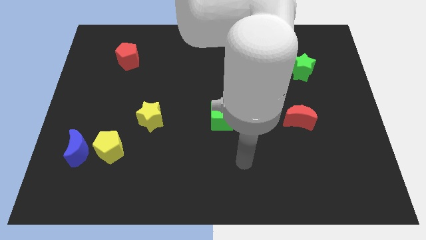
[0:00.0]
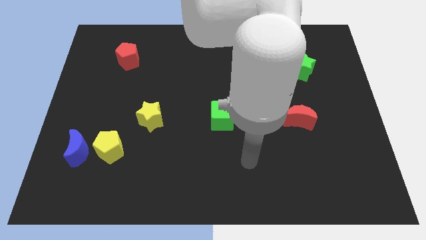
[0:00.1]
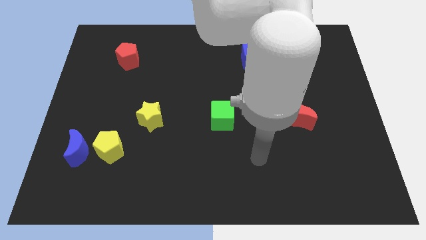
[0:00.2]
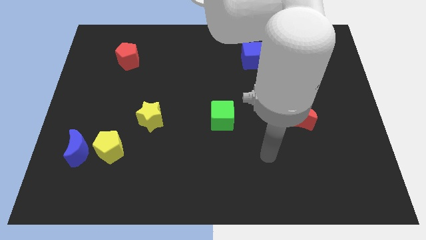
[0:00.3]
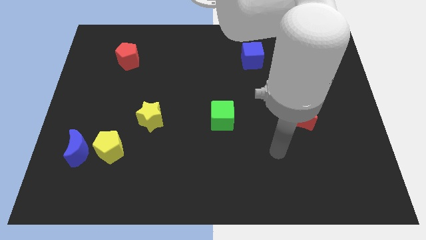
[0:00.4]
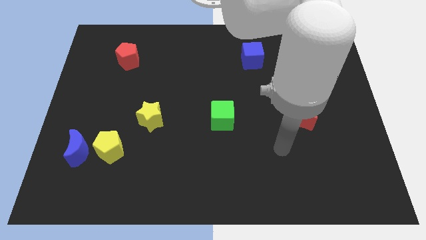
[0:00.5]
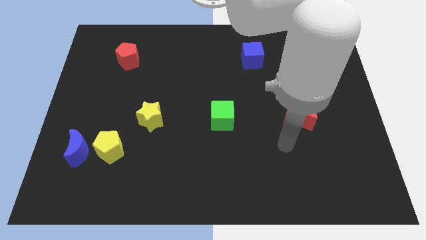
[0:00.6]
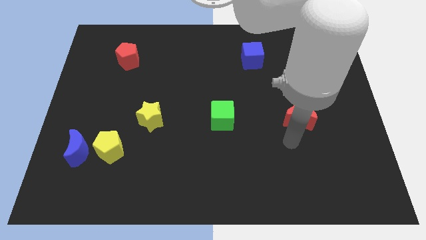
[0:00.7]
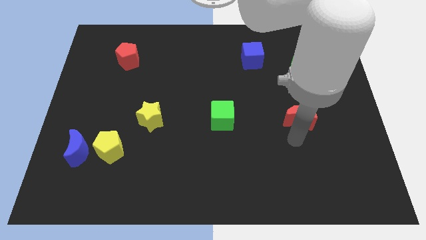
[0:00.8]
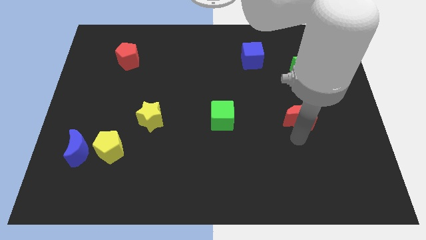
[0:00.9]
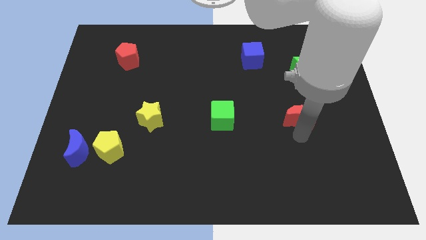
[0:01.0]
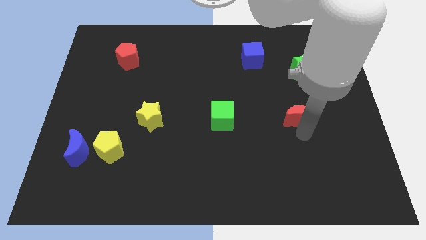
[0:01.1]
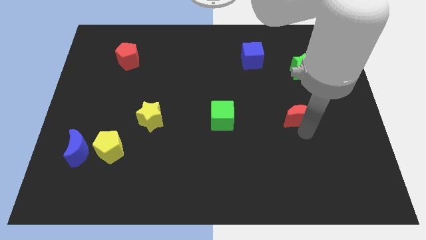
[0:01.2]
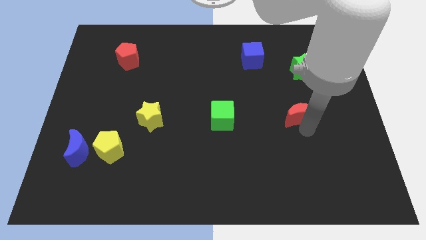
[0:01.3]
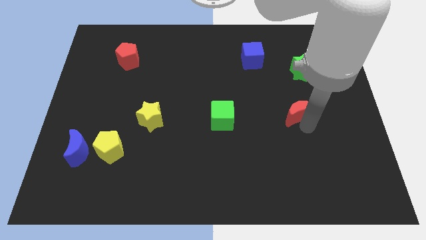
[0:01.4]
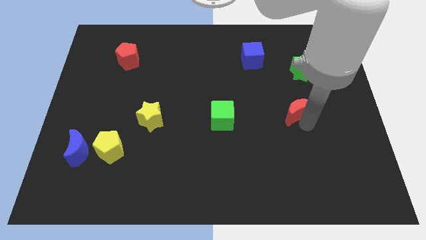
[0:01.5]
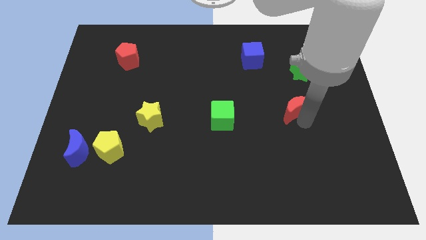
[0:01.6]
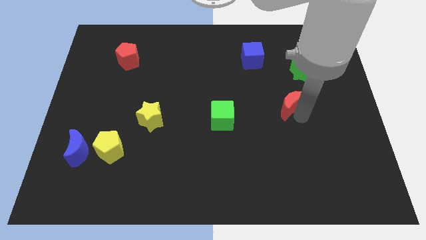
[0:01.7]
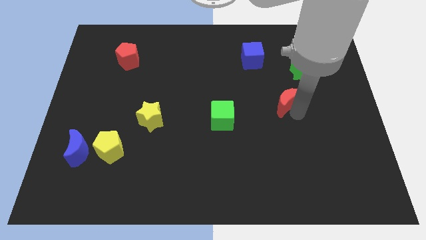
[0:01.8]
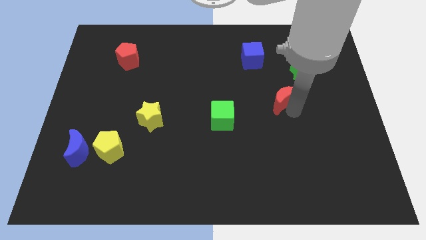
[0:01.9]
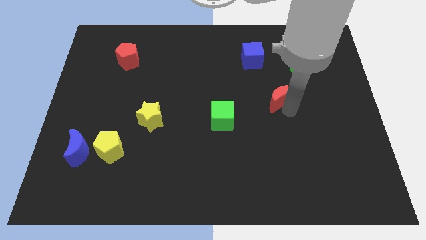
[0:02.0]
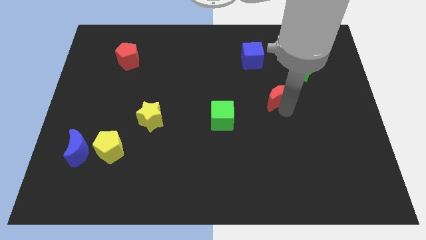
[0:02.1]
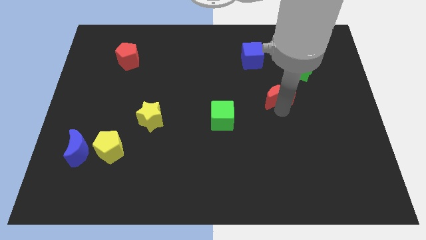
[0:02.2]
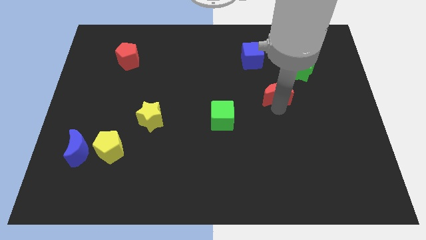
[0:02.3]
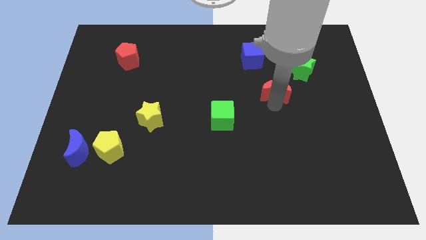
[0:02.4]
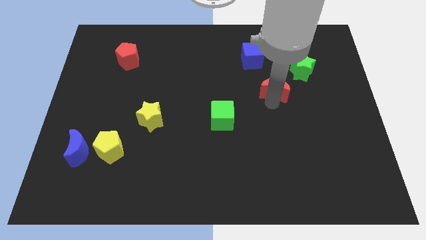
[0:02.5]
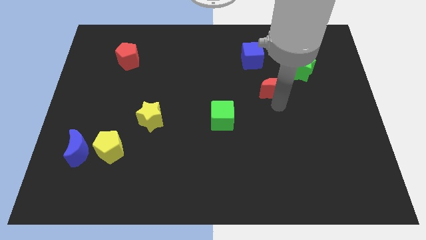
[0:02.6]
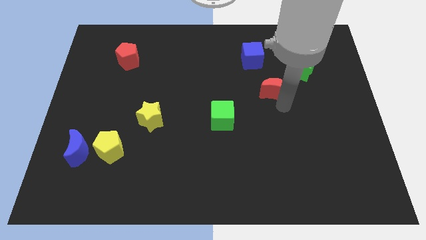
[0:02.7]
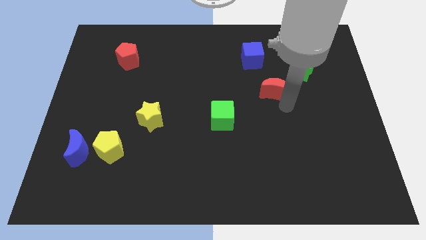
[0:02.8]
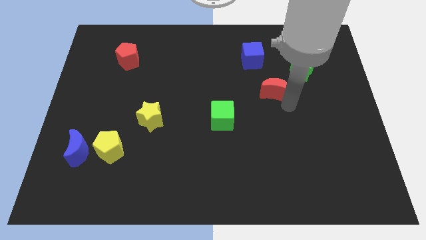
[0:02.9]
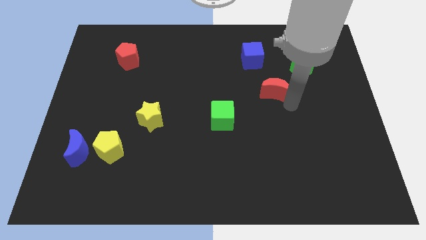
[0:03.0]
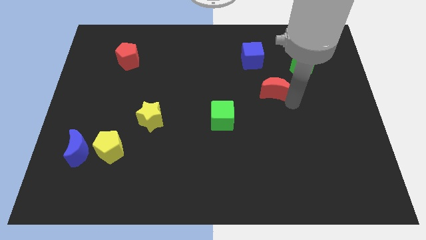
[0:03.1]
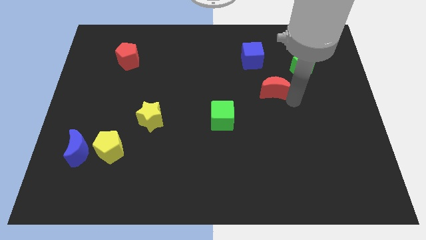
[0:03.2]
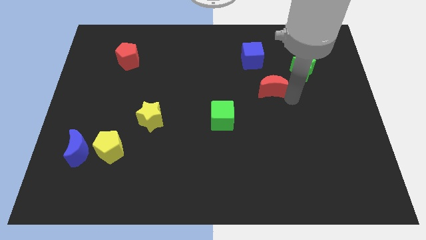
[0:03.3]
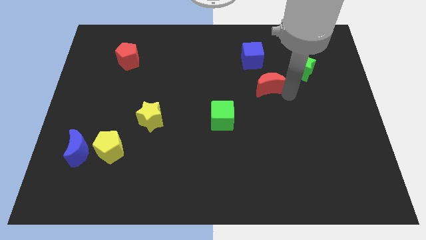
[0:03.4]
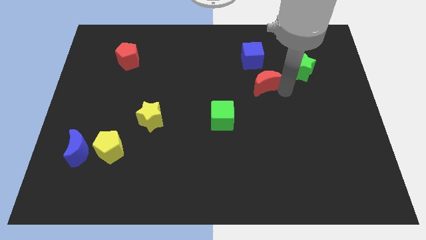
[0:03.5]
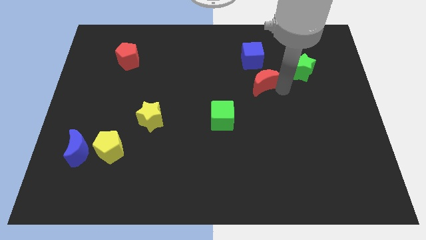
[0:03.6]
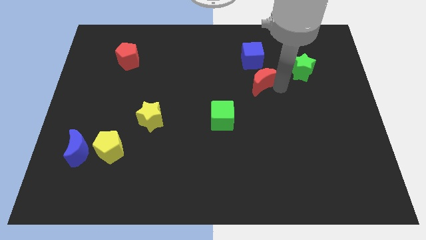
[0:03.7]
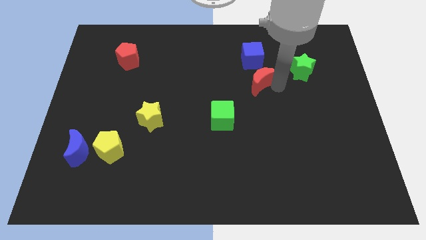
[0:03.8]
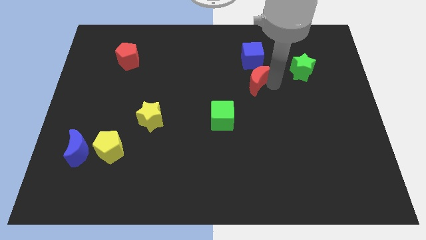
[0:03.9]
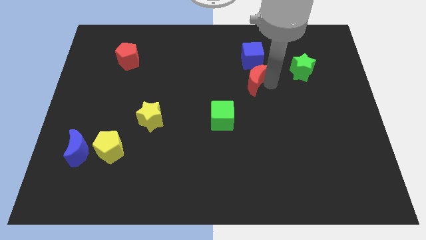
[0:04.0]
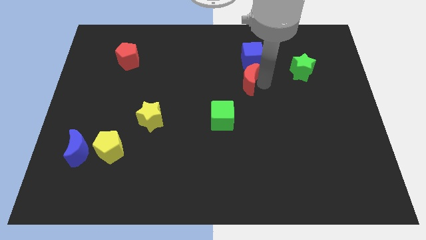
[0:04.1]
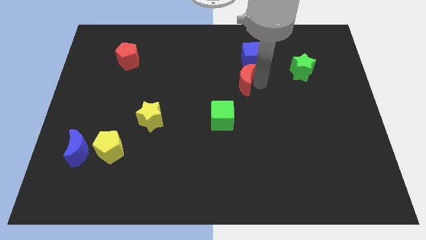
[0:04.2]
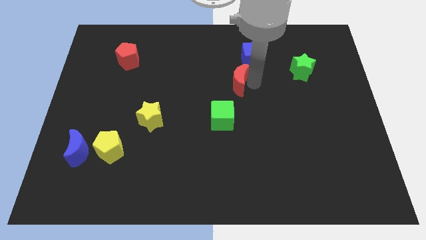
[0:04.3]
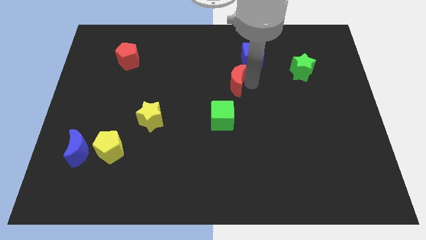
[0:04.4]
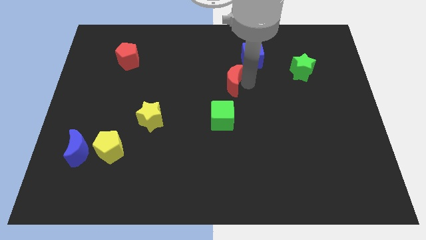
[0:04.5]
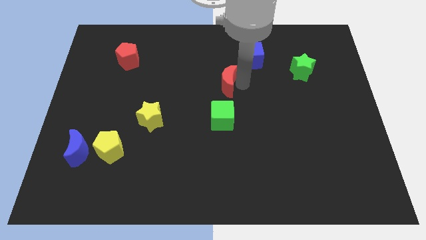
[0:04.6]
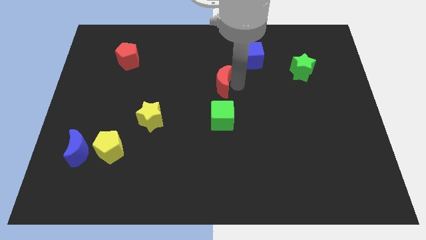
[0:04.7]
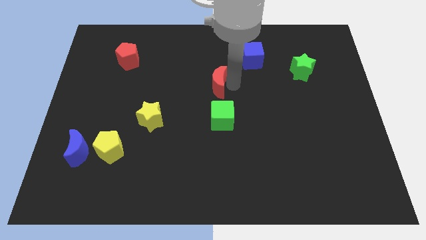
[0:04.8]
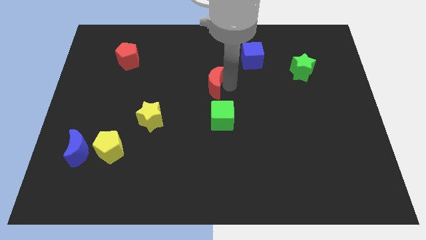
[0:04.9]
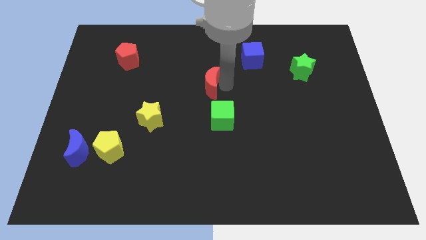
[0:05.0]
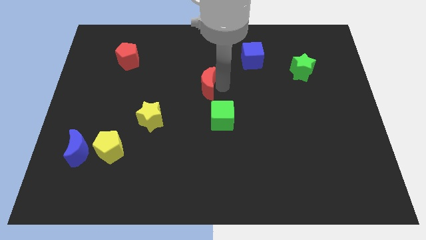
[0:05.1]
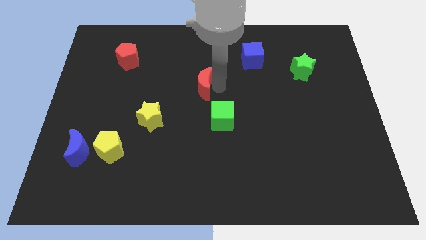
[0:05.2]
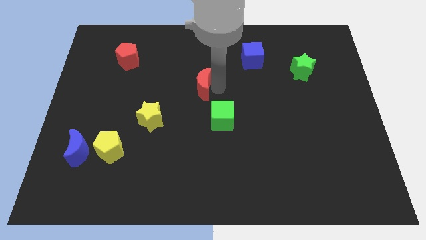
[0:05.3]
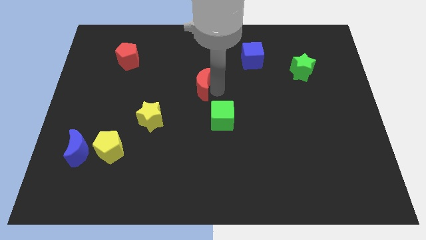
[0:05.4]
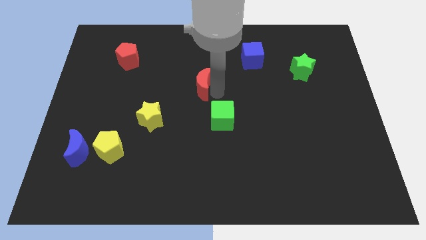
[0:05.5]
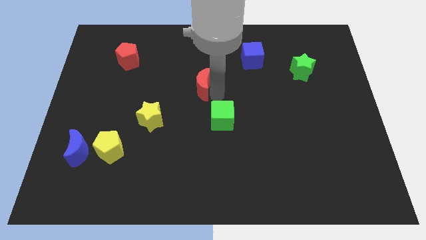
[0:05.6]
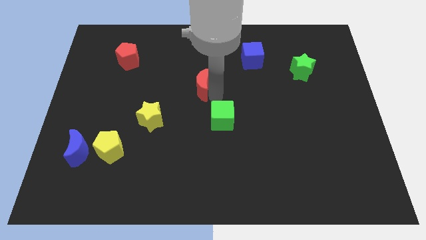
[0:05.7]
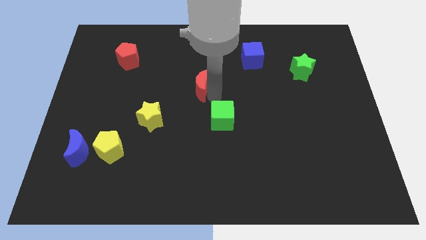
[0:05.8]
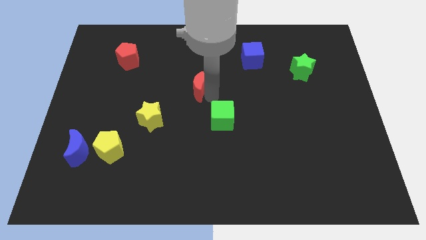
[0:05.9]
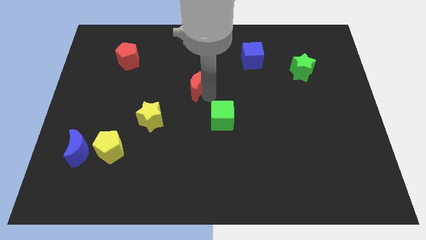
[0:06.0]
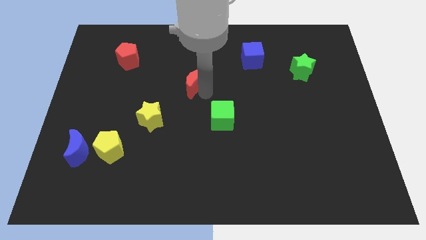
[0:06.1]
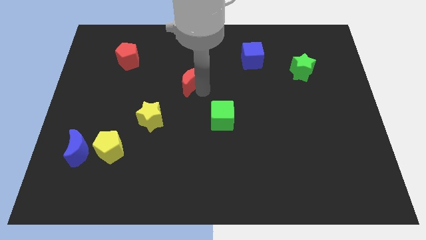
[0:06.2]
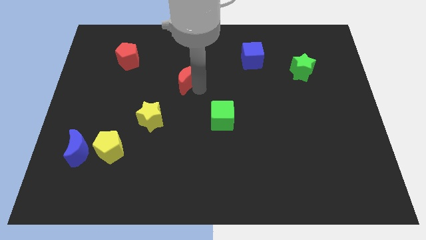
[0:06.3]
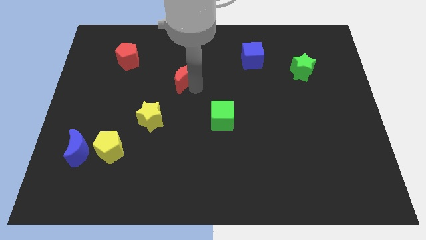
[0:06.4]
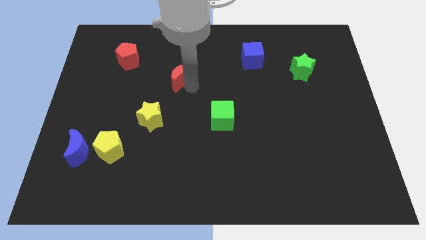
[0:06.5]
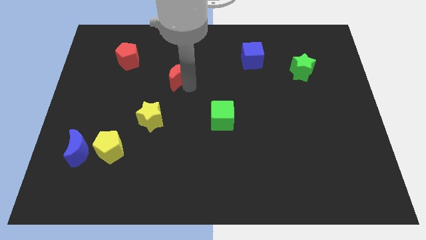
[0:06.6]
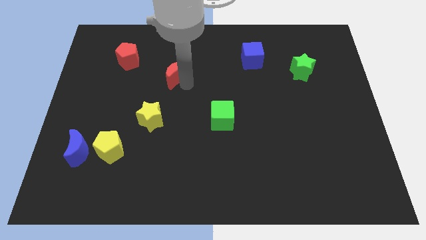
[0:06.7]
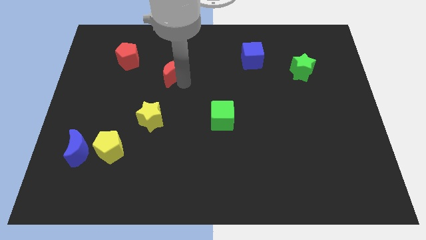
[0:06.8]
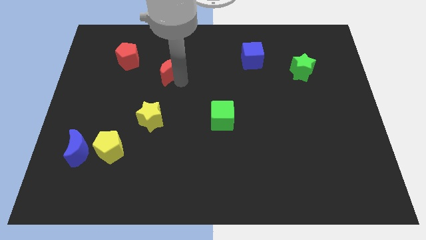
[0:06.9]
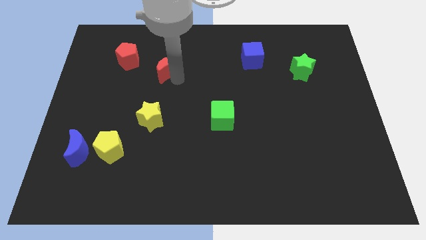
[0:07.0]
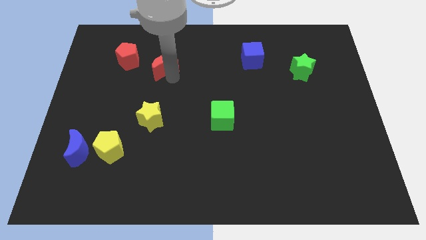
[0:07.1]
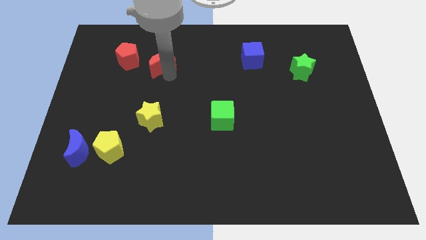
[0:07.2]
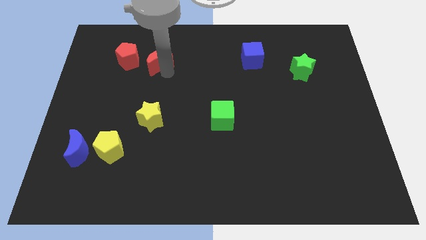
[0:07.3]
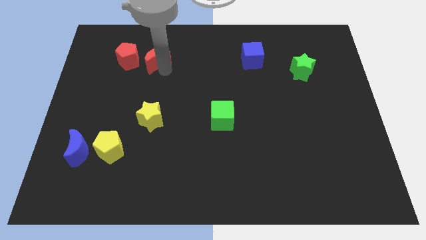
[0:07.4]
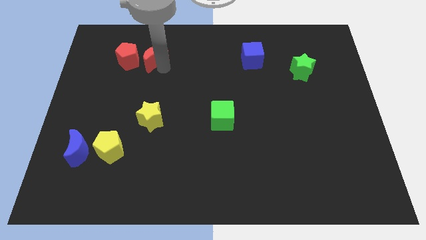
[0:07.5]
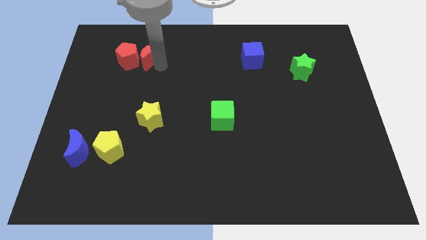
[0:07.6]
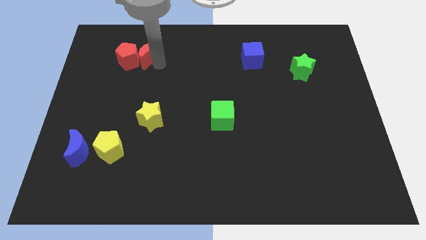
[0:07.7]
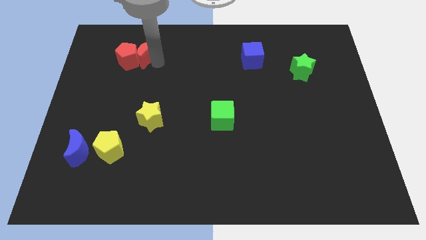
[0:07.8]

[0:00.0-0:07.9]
slide the red moon towards the red pentagon

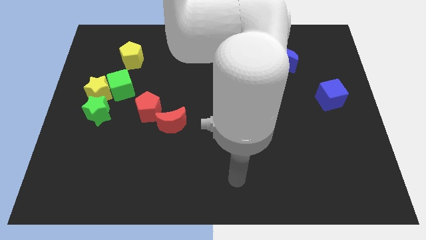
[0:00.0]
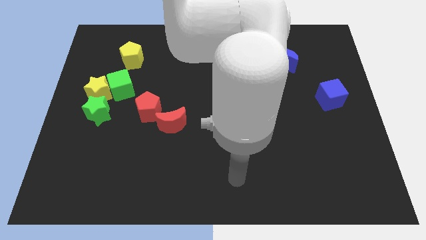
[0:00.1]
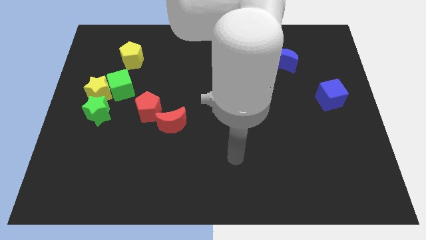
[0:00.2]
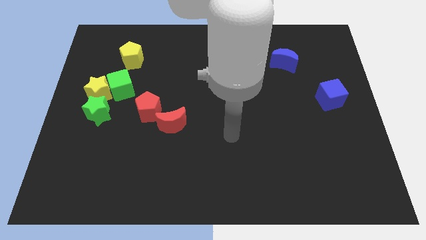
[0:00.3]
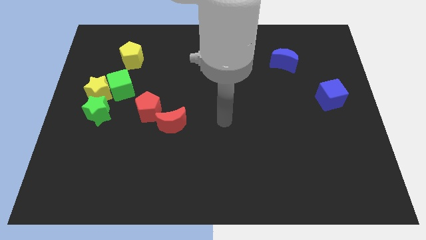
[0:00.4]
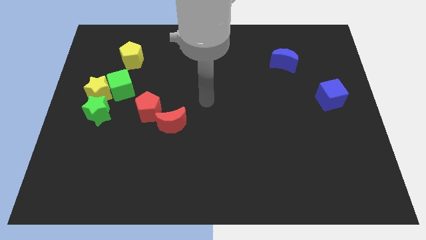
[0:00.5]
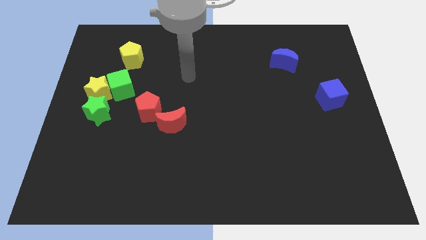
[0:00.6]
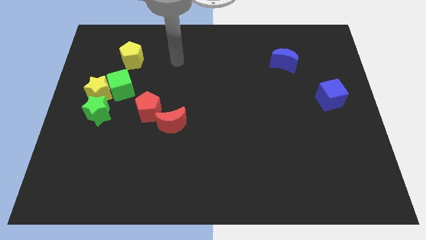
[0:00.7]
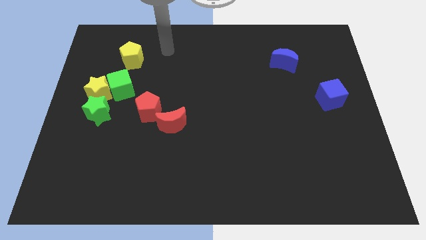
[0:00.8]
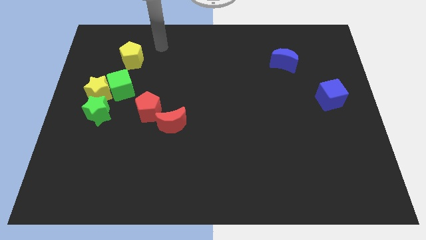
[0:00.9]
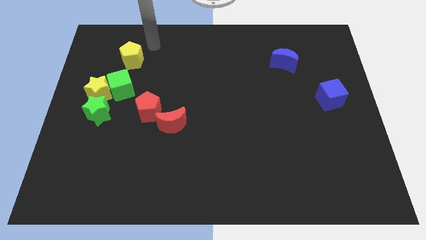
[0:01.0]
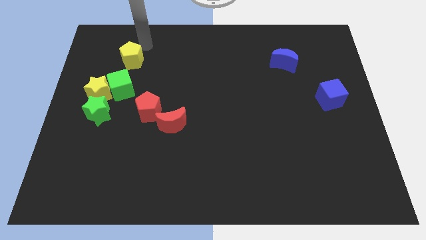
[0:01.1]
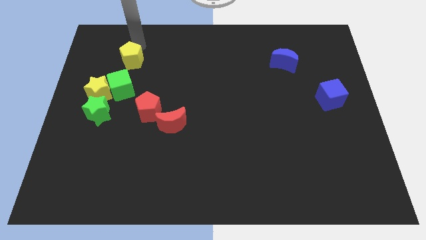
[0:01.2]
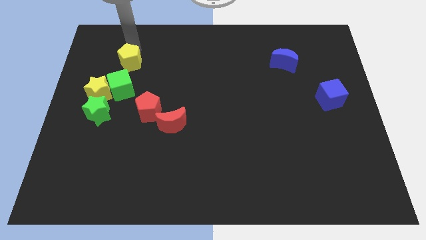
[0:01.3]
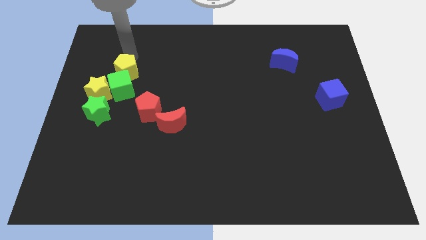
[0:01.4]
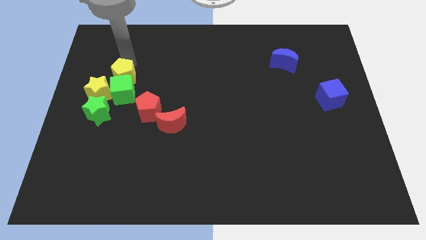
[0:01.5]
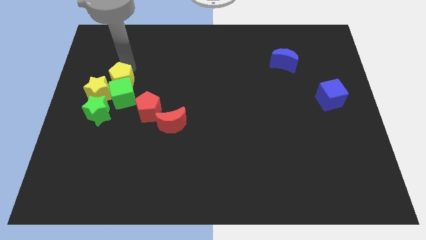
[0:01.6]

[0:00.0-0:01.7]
put the yellow pentagon towards the green cube
